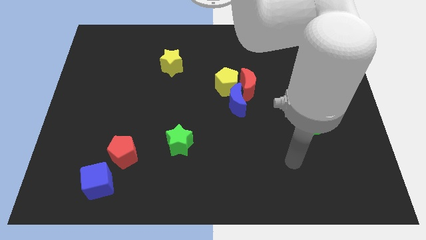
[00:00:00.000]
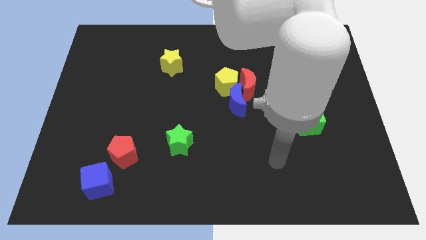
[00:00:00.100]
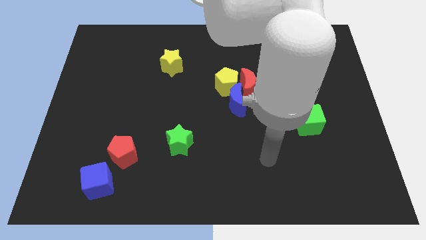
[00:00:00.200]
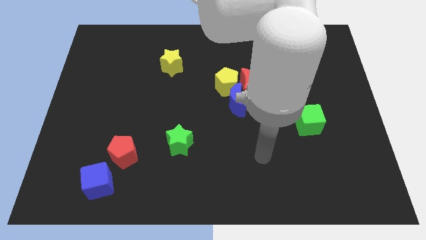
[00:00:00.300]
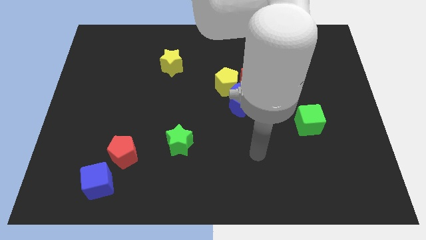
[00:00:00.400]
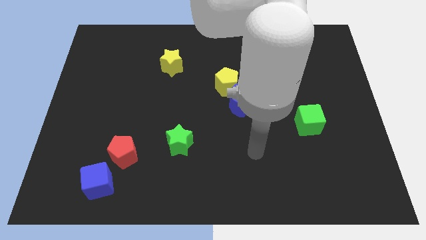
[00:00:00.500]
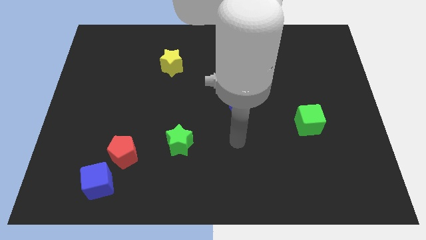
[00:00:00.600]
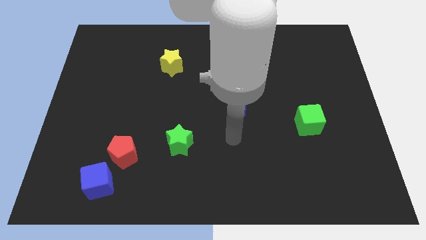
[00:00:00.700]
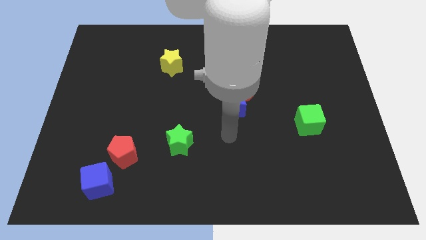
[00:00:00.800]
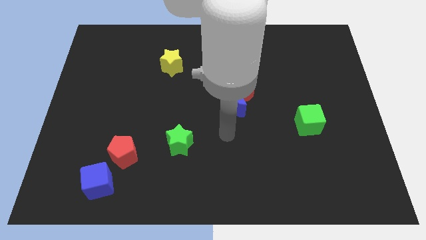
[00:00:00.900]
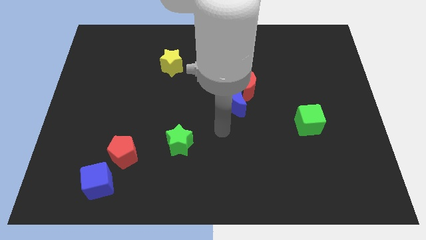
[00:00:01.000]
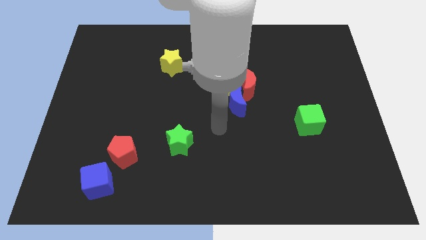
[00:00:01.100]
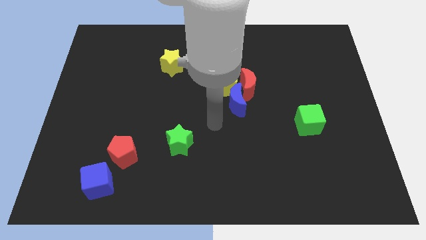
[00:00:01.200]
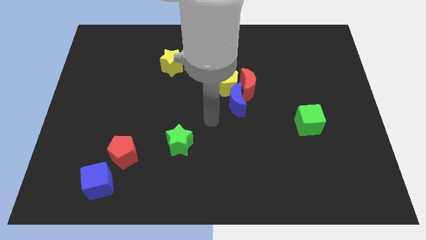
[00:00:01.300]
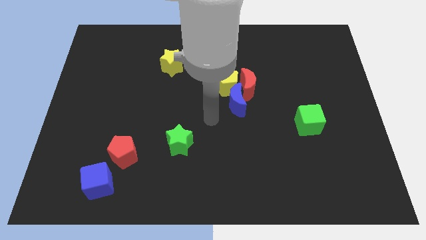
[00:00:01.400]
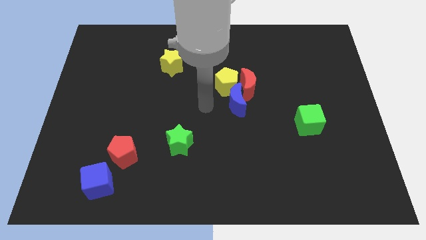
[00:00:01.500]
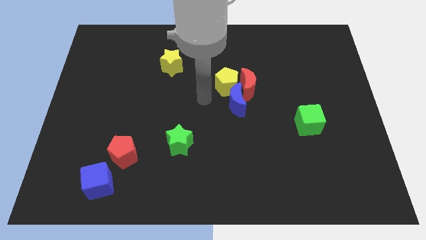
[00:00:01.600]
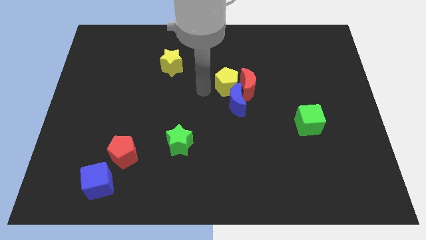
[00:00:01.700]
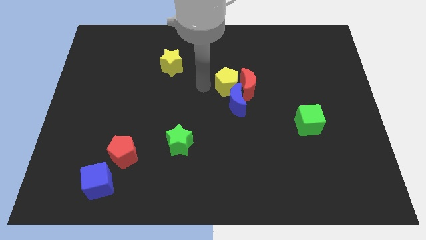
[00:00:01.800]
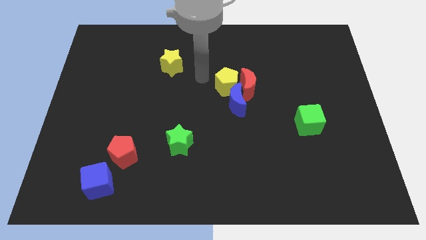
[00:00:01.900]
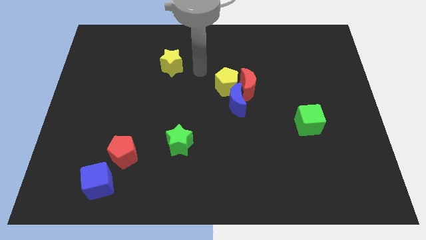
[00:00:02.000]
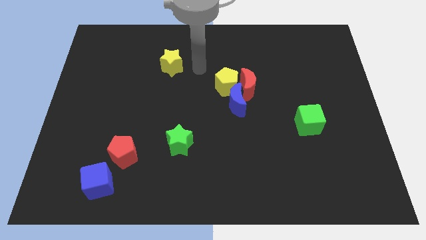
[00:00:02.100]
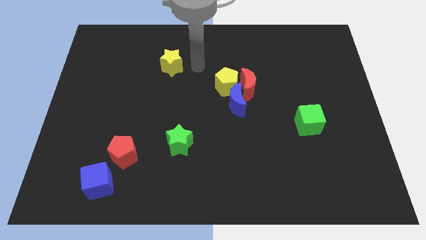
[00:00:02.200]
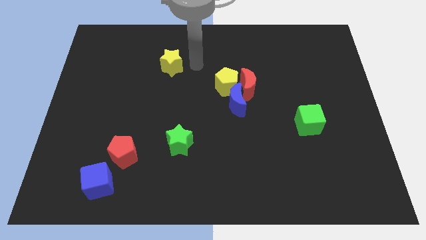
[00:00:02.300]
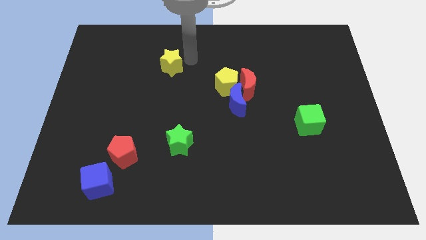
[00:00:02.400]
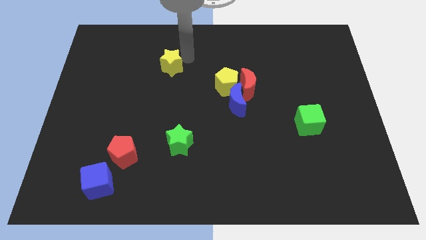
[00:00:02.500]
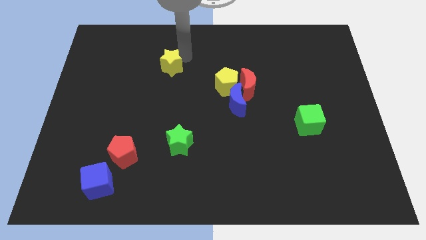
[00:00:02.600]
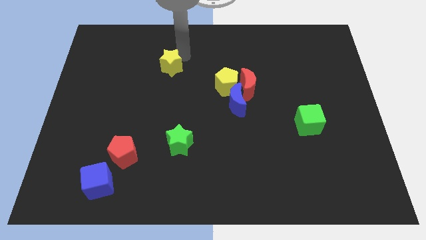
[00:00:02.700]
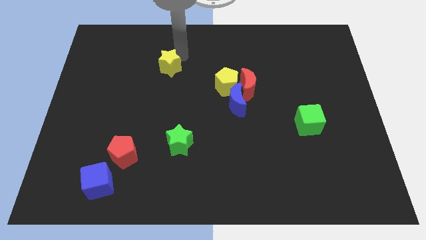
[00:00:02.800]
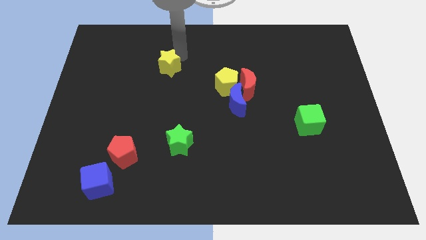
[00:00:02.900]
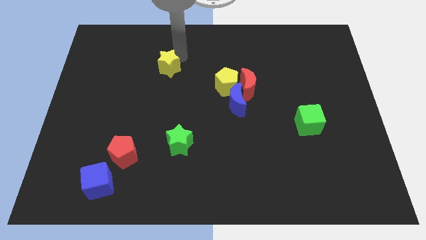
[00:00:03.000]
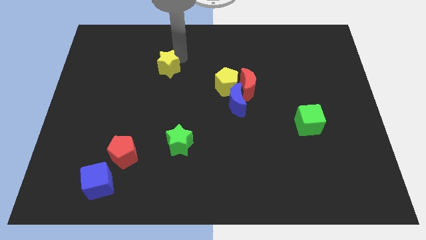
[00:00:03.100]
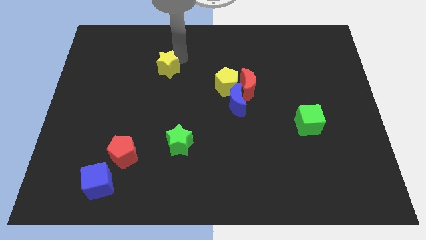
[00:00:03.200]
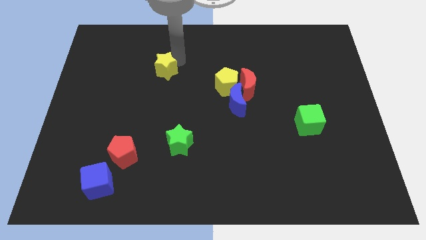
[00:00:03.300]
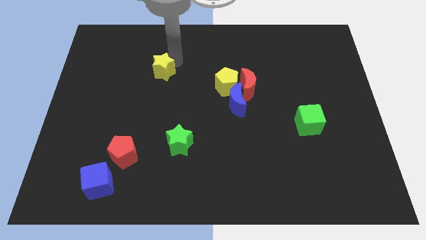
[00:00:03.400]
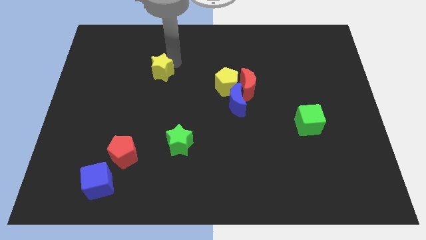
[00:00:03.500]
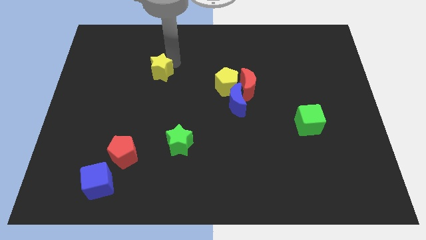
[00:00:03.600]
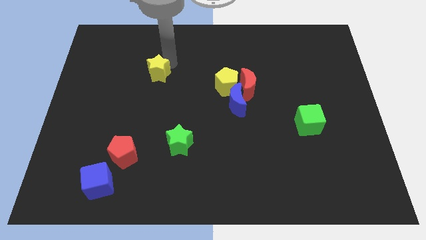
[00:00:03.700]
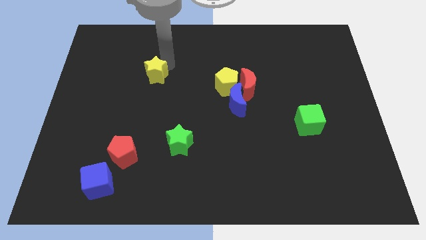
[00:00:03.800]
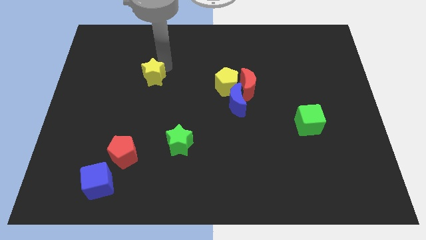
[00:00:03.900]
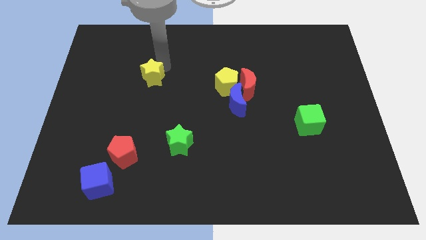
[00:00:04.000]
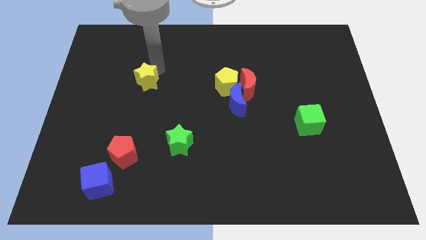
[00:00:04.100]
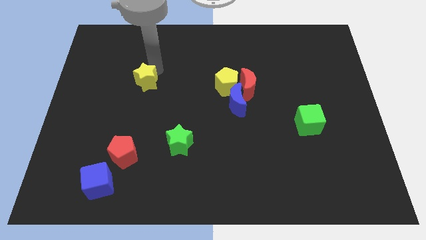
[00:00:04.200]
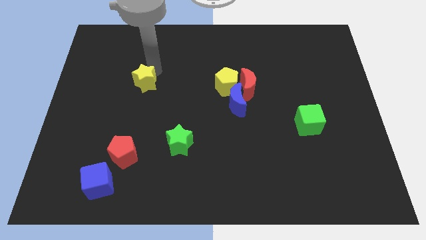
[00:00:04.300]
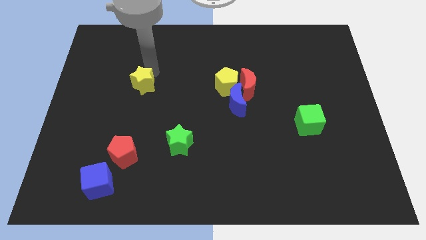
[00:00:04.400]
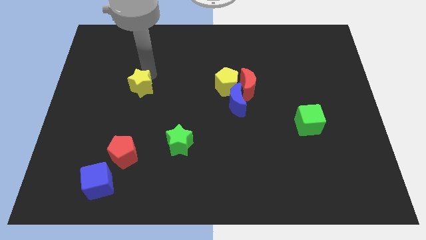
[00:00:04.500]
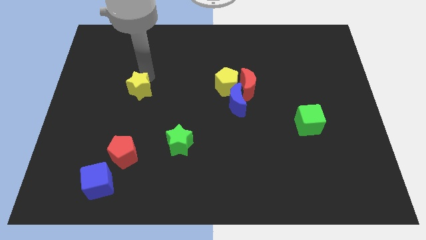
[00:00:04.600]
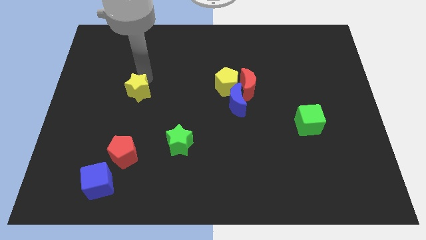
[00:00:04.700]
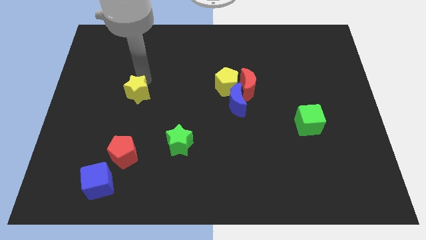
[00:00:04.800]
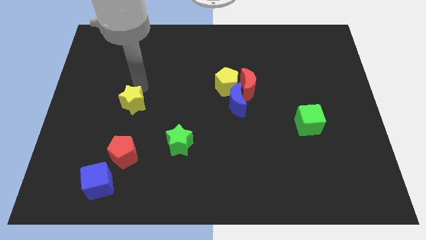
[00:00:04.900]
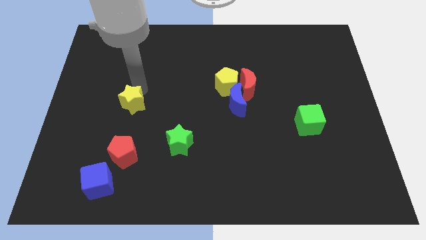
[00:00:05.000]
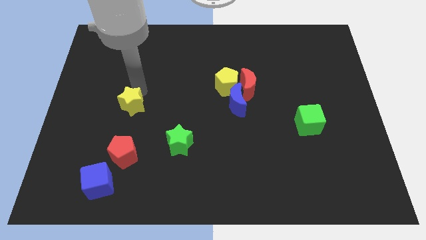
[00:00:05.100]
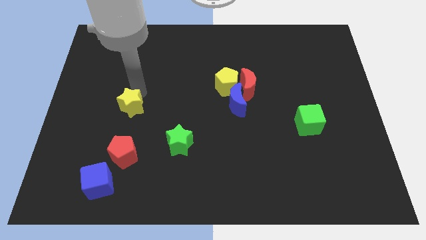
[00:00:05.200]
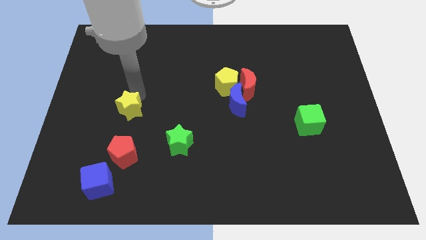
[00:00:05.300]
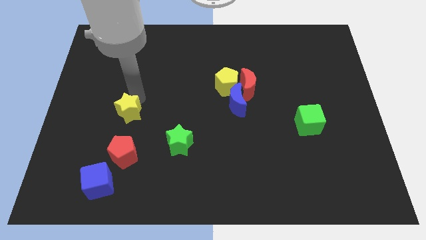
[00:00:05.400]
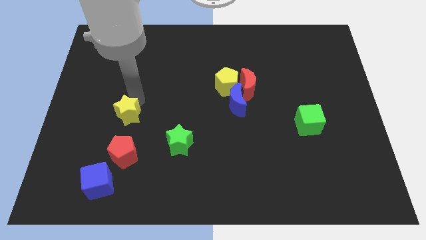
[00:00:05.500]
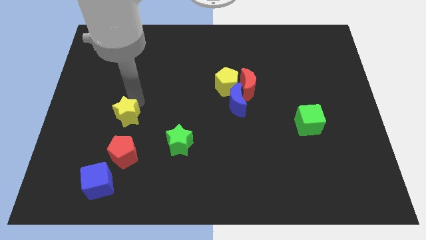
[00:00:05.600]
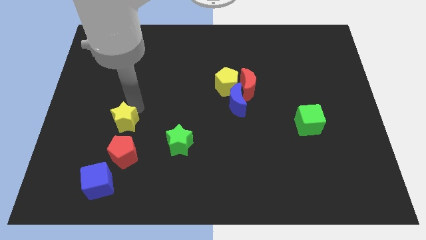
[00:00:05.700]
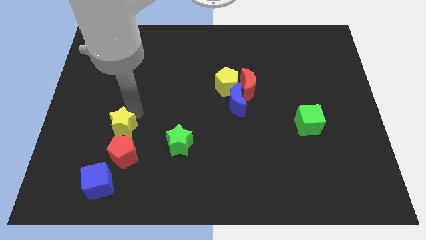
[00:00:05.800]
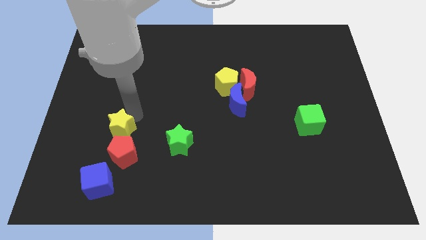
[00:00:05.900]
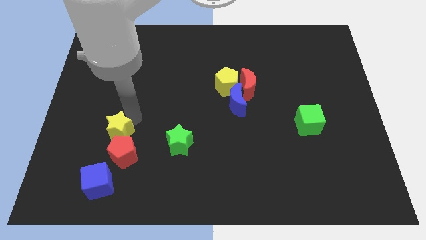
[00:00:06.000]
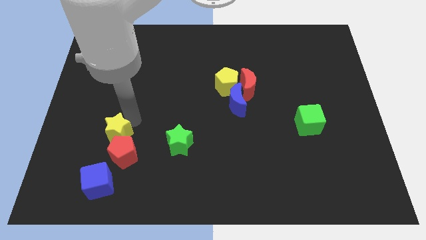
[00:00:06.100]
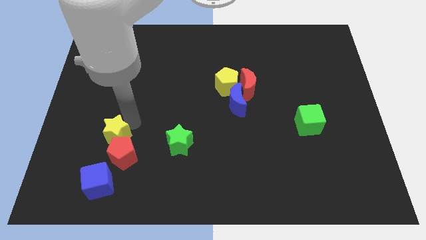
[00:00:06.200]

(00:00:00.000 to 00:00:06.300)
slide the yellow star close to the red pentagon

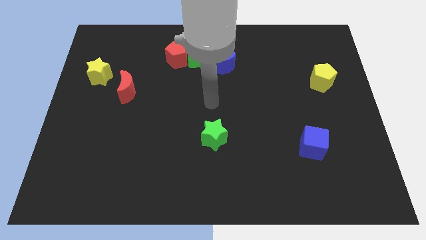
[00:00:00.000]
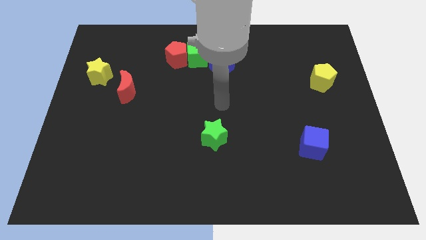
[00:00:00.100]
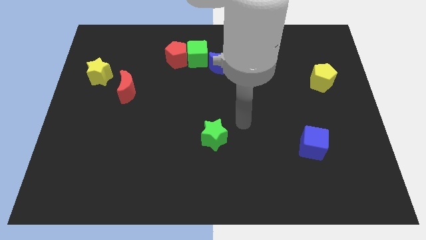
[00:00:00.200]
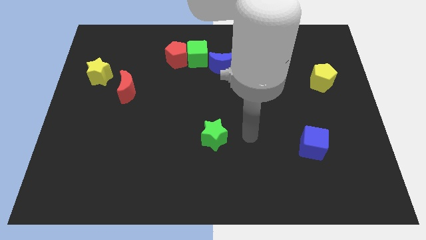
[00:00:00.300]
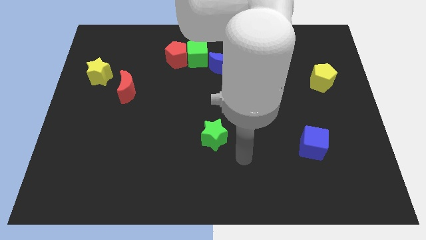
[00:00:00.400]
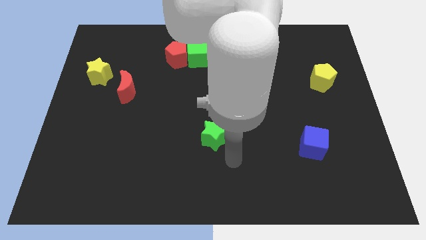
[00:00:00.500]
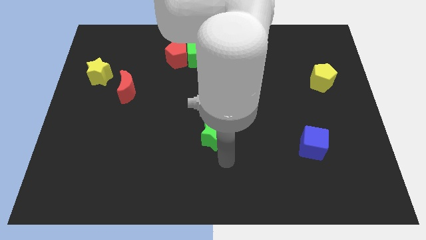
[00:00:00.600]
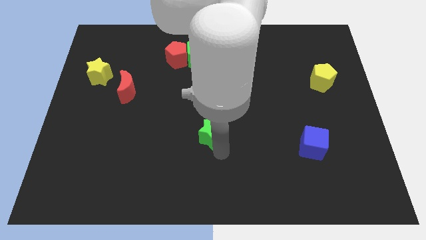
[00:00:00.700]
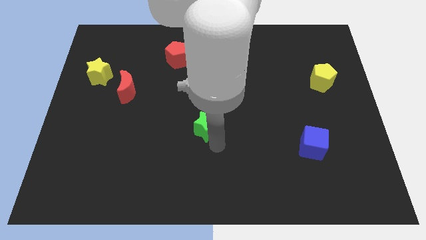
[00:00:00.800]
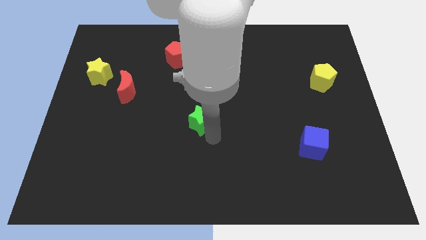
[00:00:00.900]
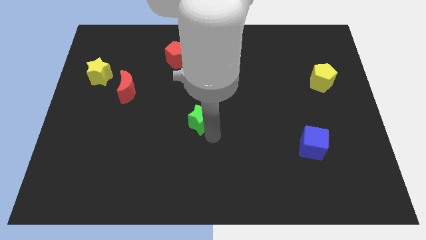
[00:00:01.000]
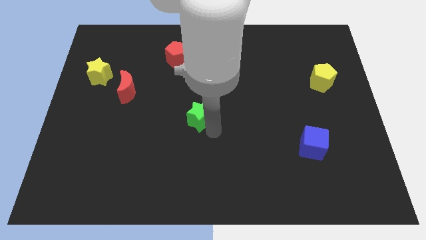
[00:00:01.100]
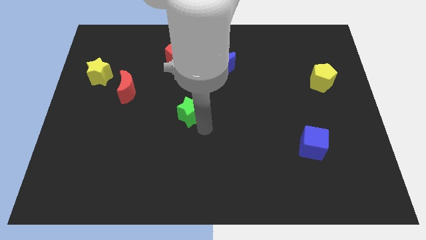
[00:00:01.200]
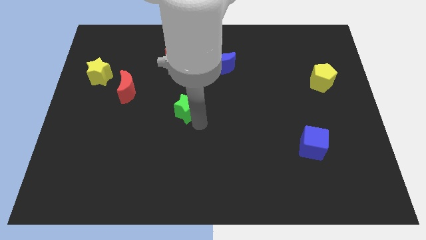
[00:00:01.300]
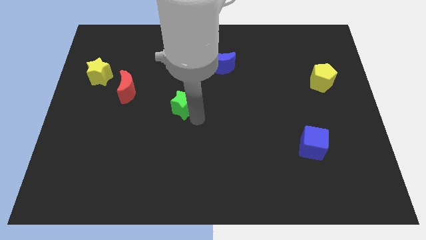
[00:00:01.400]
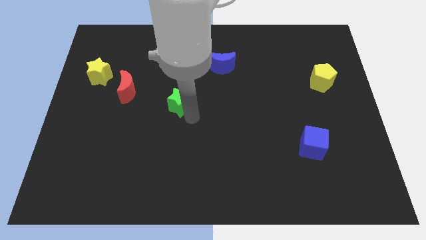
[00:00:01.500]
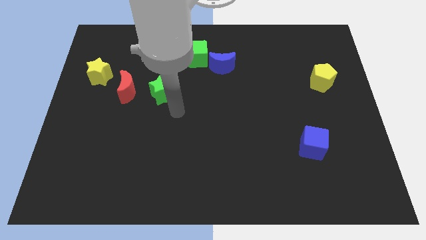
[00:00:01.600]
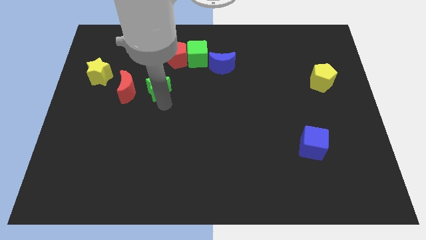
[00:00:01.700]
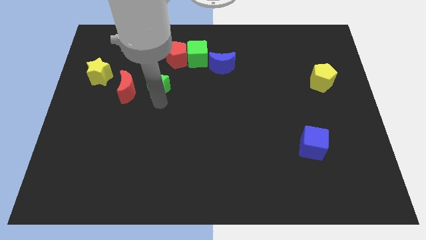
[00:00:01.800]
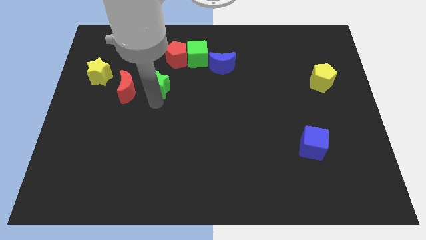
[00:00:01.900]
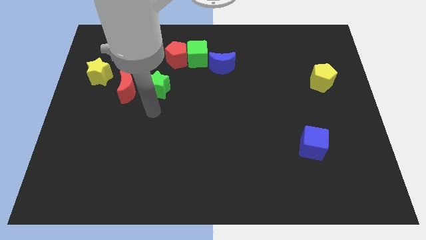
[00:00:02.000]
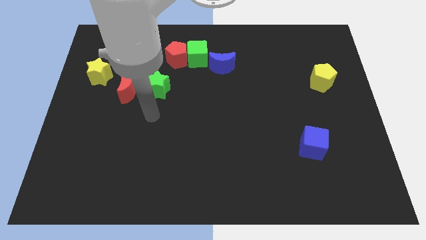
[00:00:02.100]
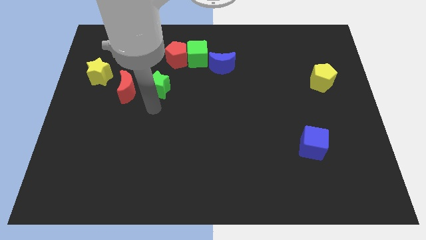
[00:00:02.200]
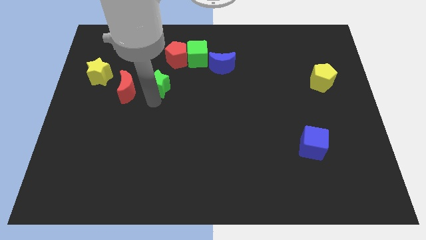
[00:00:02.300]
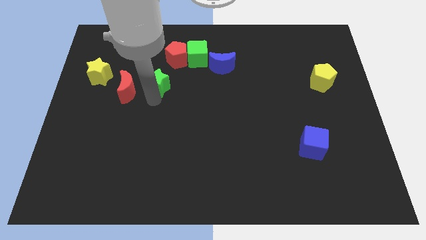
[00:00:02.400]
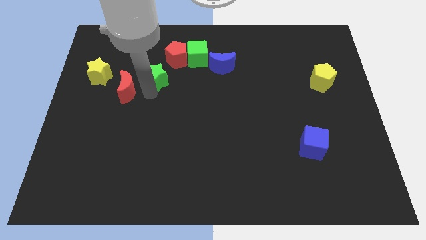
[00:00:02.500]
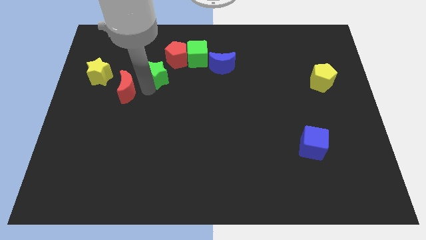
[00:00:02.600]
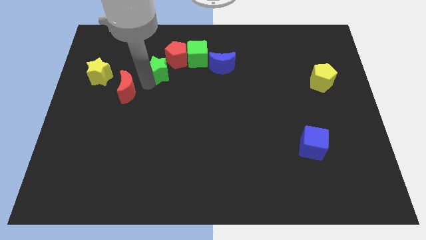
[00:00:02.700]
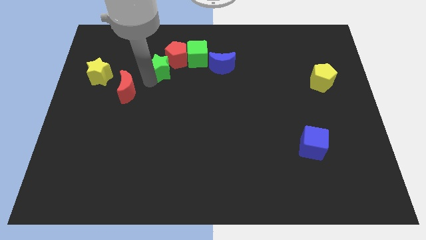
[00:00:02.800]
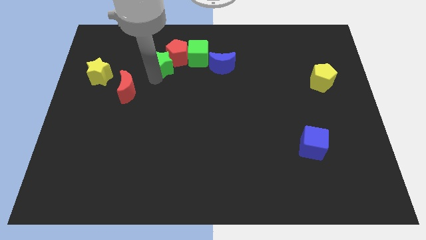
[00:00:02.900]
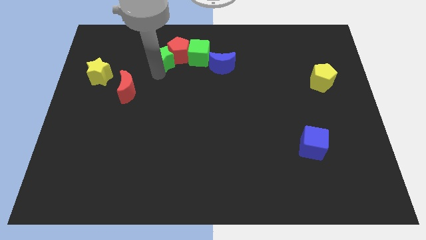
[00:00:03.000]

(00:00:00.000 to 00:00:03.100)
push the green star to the red pentagon
